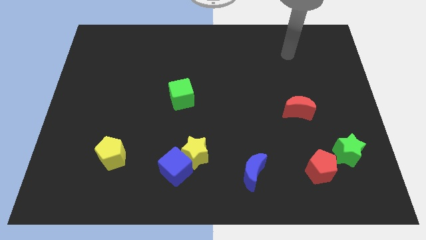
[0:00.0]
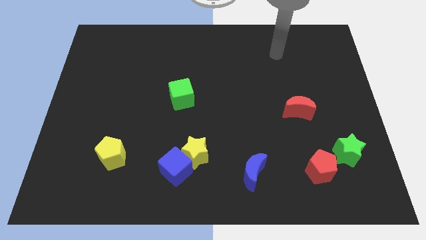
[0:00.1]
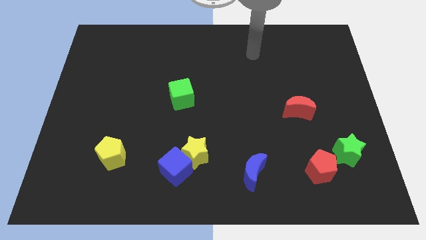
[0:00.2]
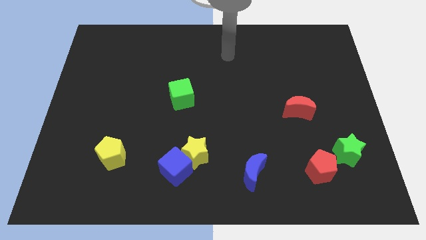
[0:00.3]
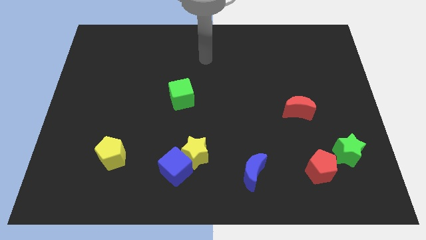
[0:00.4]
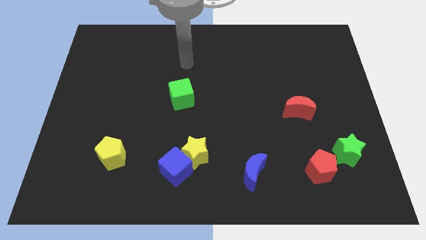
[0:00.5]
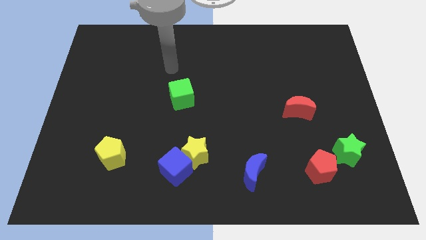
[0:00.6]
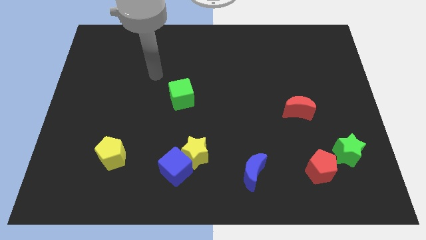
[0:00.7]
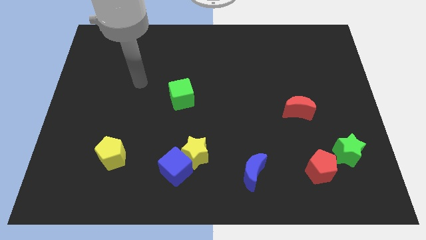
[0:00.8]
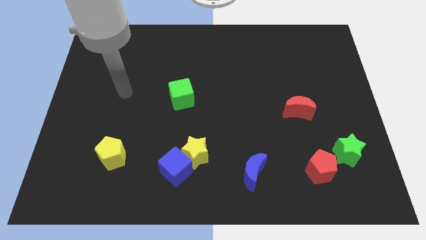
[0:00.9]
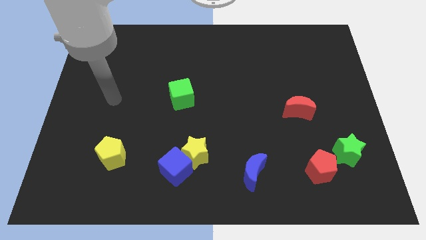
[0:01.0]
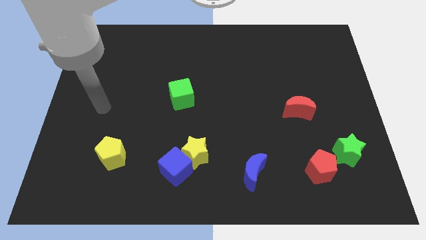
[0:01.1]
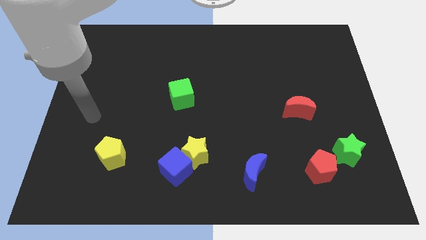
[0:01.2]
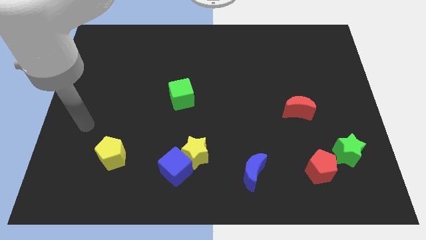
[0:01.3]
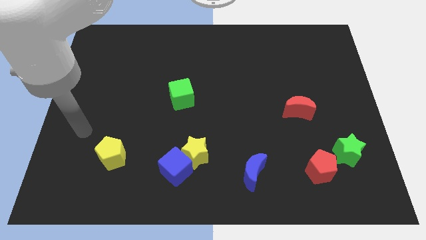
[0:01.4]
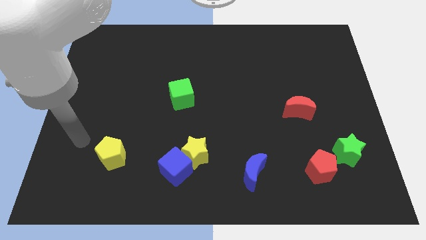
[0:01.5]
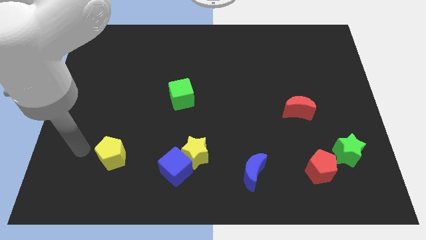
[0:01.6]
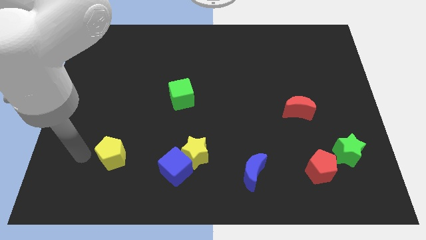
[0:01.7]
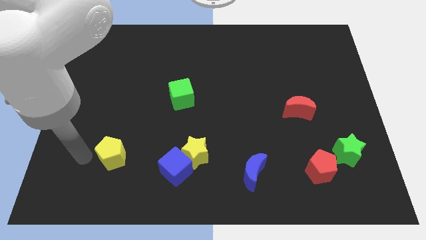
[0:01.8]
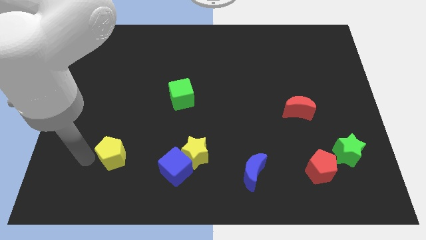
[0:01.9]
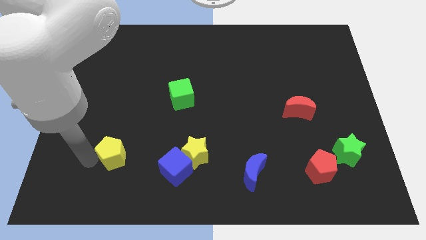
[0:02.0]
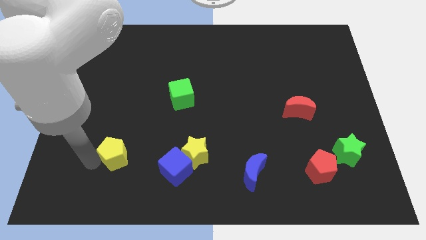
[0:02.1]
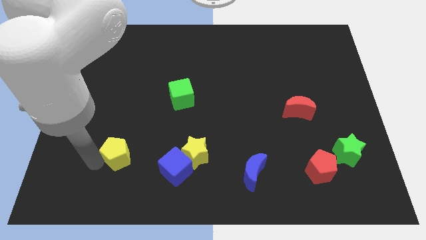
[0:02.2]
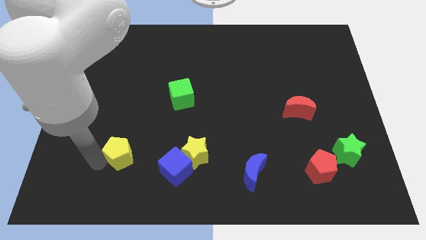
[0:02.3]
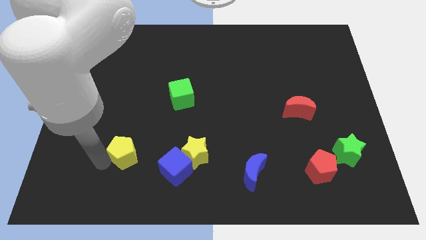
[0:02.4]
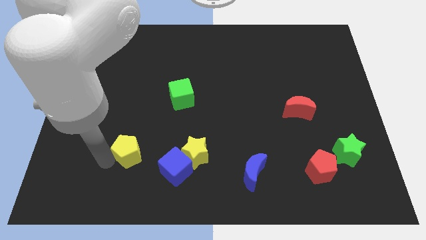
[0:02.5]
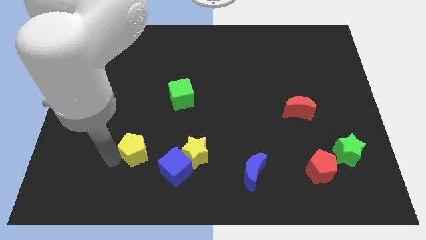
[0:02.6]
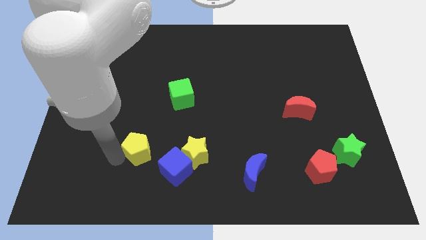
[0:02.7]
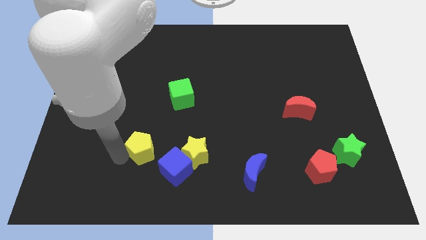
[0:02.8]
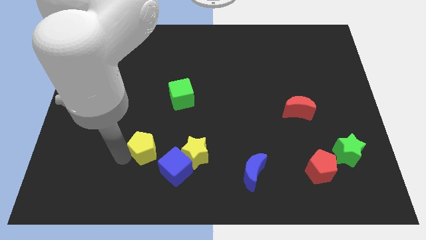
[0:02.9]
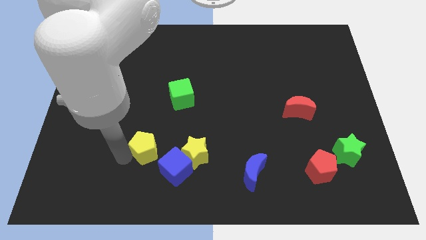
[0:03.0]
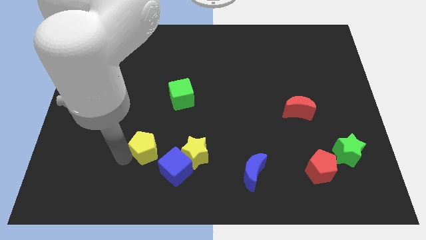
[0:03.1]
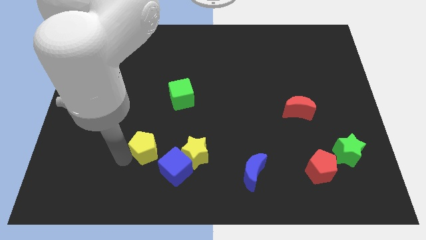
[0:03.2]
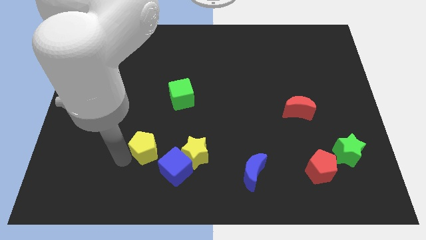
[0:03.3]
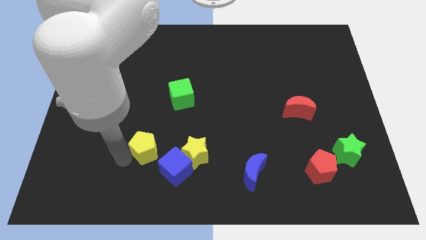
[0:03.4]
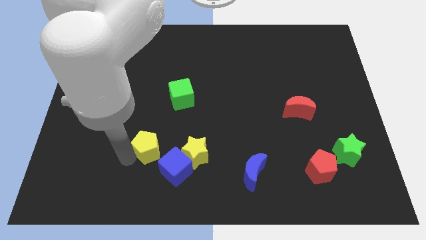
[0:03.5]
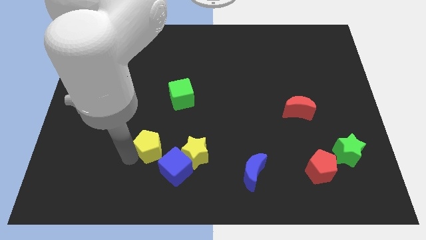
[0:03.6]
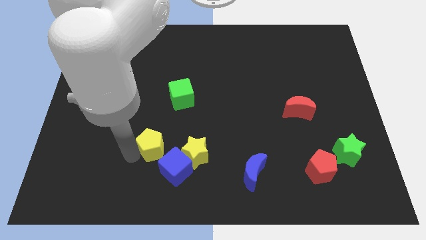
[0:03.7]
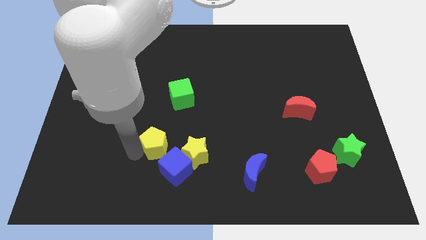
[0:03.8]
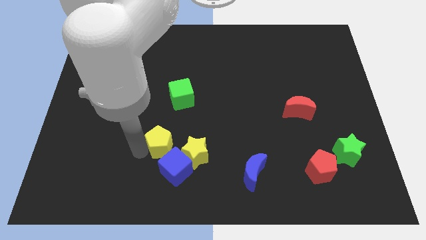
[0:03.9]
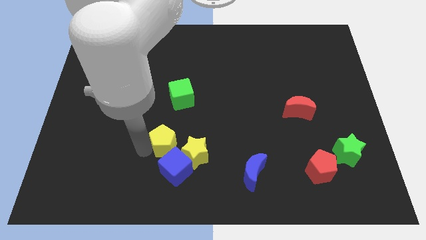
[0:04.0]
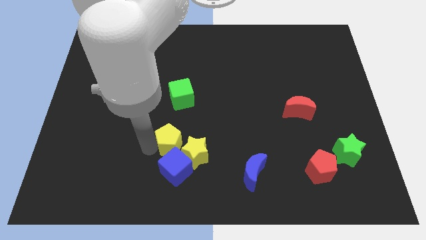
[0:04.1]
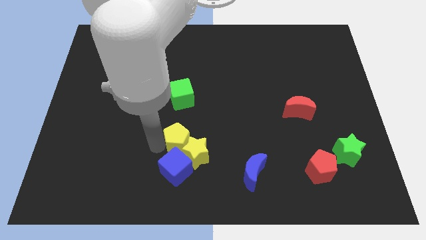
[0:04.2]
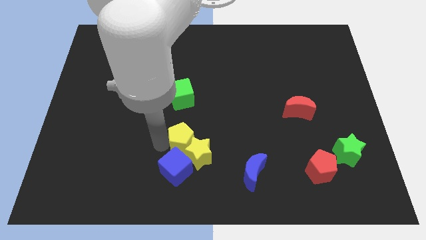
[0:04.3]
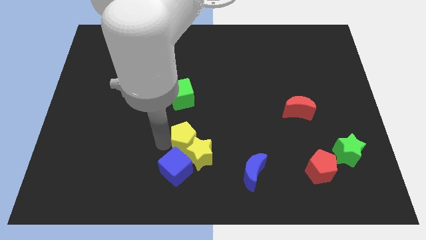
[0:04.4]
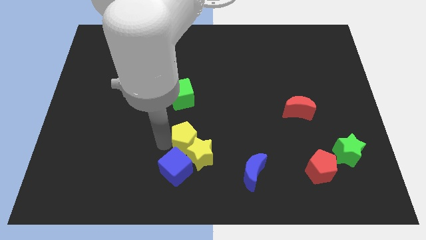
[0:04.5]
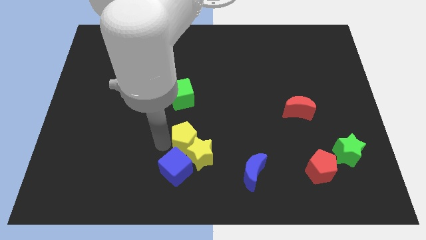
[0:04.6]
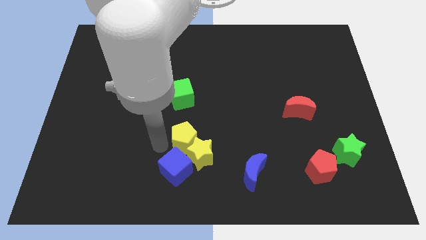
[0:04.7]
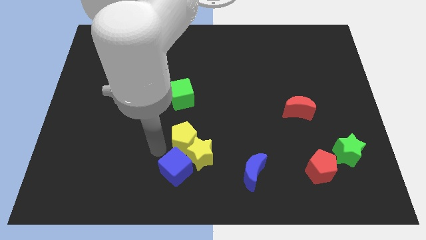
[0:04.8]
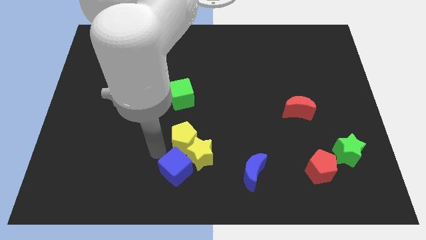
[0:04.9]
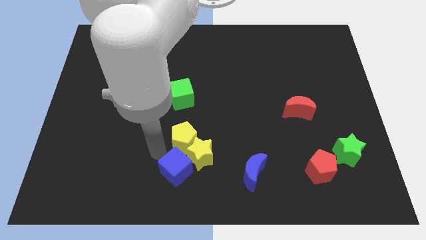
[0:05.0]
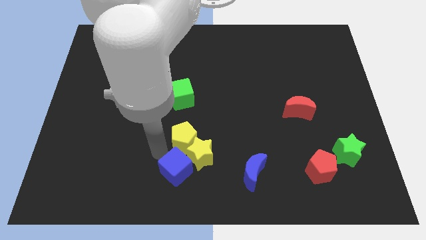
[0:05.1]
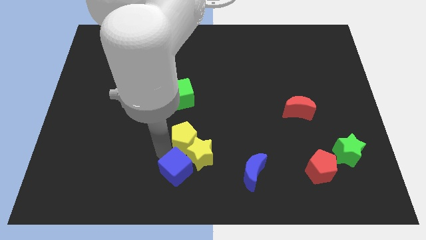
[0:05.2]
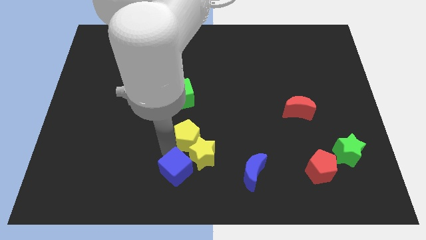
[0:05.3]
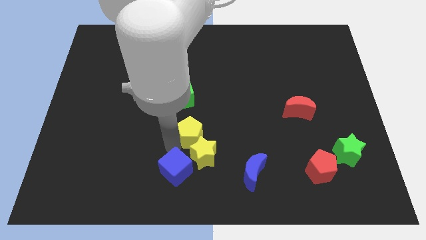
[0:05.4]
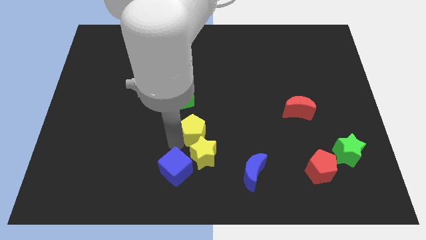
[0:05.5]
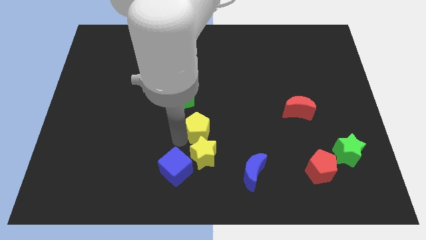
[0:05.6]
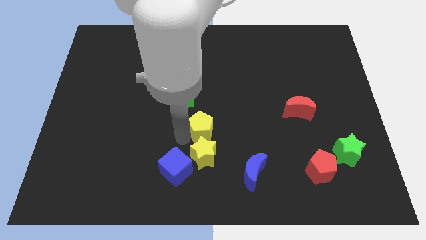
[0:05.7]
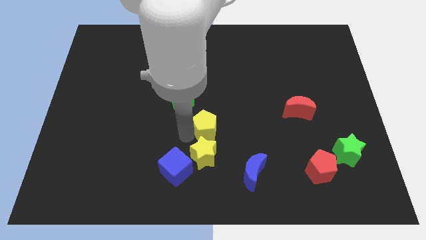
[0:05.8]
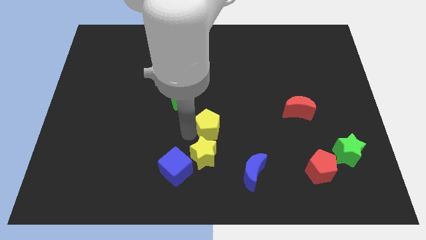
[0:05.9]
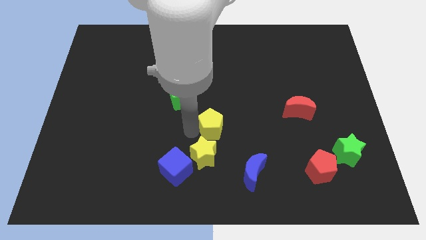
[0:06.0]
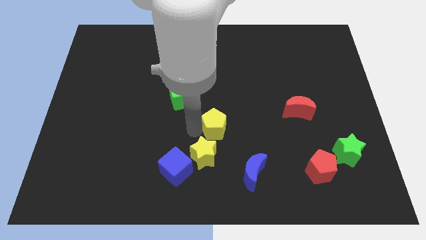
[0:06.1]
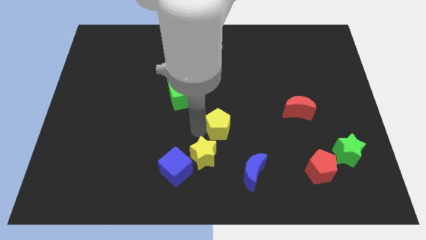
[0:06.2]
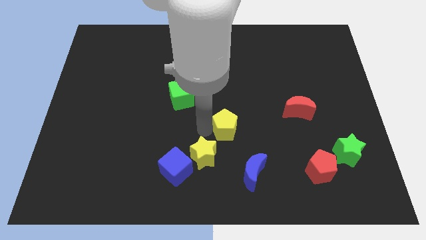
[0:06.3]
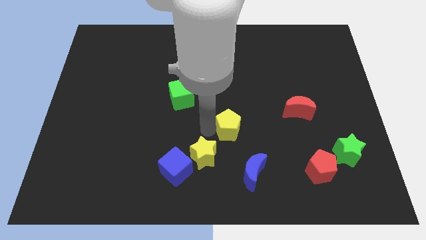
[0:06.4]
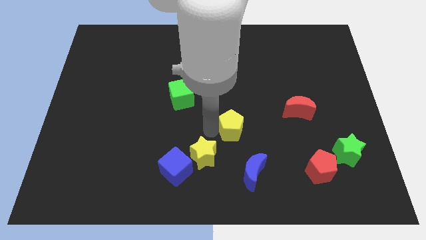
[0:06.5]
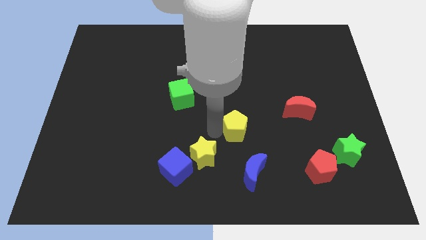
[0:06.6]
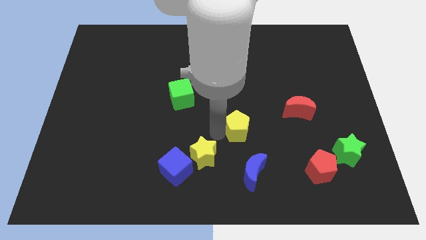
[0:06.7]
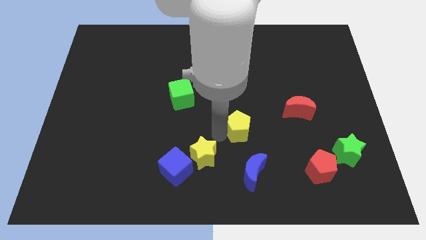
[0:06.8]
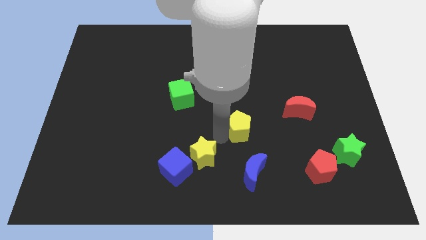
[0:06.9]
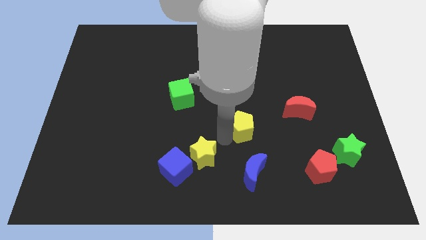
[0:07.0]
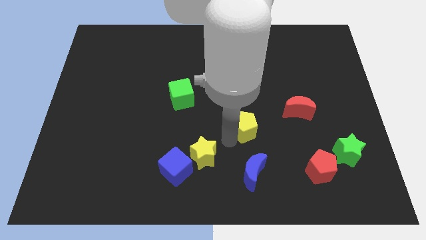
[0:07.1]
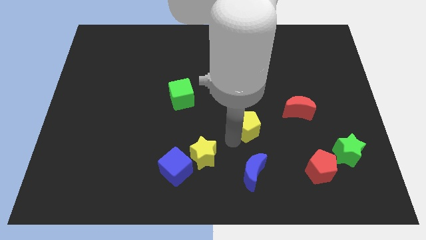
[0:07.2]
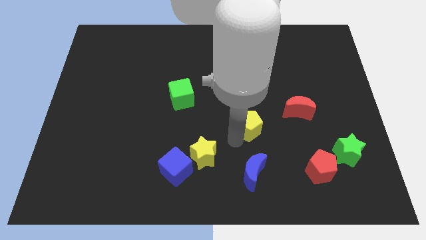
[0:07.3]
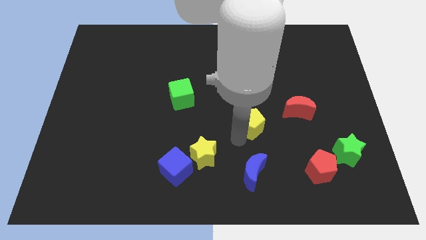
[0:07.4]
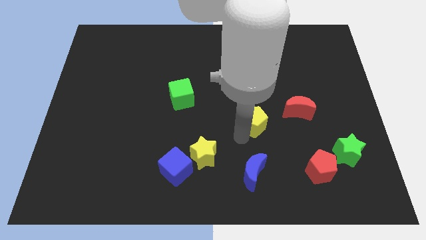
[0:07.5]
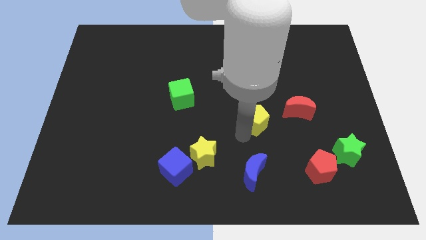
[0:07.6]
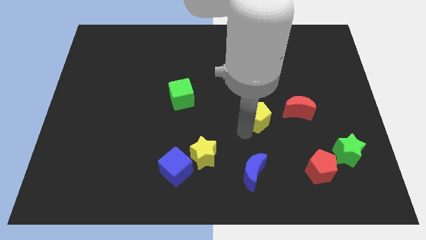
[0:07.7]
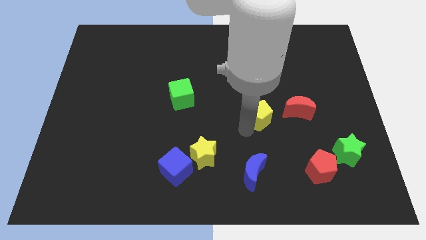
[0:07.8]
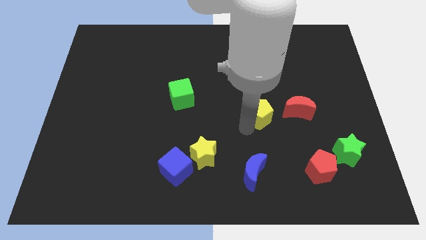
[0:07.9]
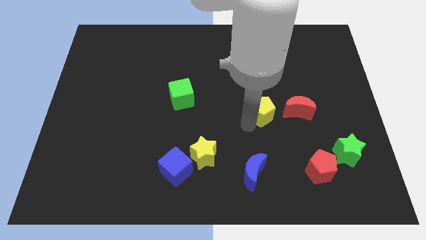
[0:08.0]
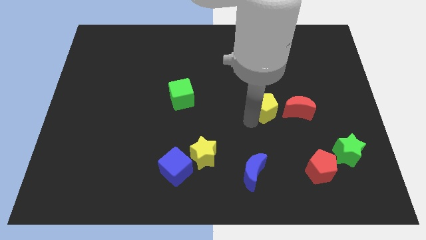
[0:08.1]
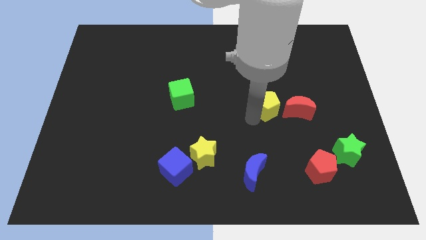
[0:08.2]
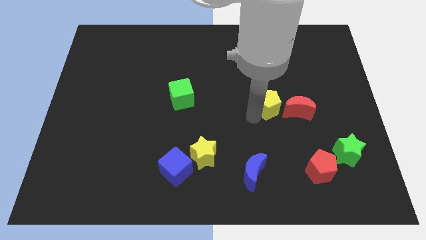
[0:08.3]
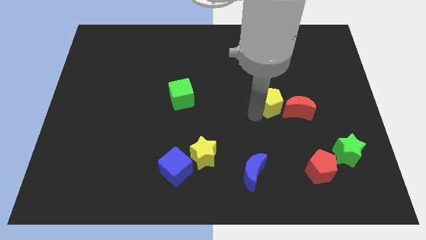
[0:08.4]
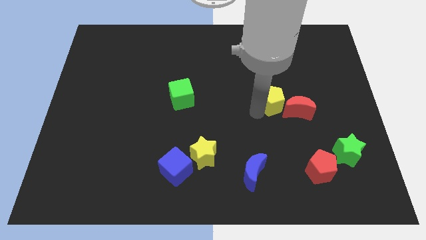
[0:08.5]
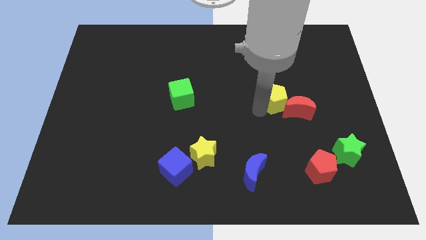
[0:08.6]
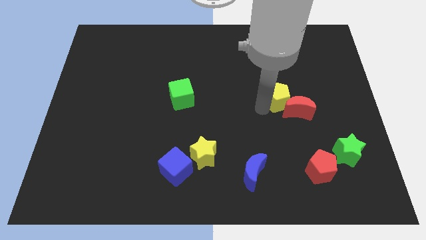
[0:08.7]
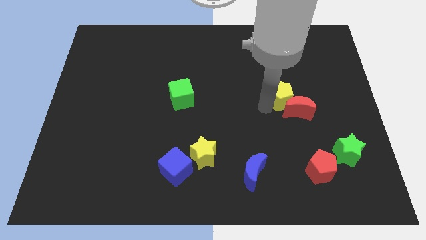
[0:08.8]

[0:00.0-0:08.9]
slide the yellow pentagon close to the red moon
